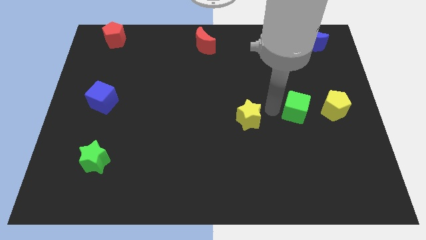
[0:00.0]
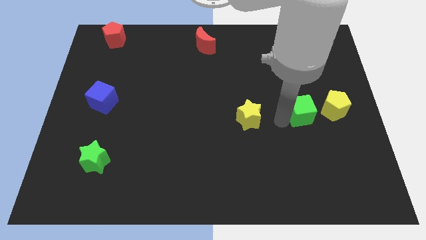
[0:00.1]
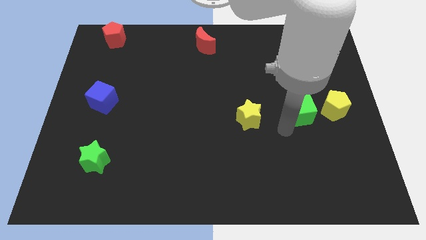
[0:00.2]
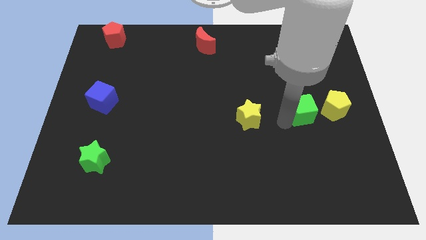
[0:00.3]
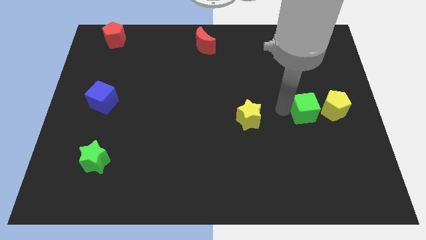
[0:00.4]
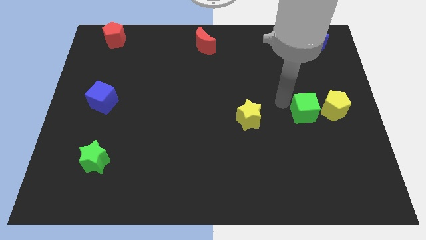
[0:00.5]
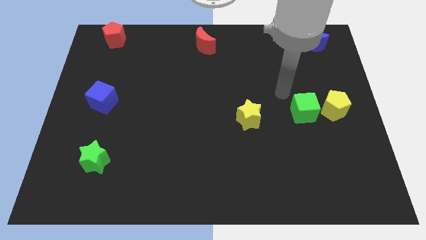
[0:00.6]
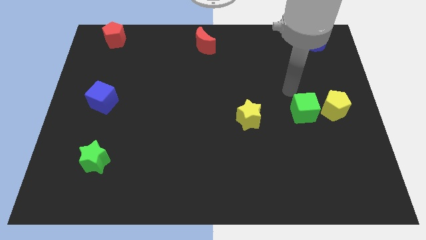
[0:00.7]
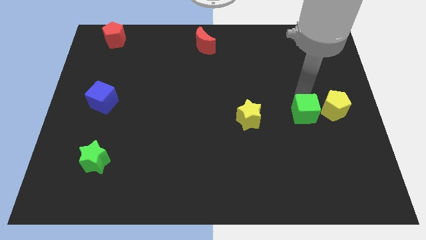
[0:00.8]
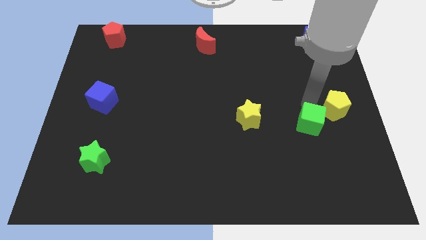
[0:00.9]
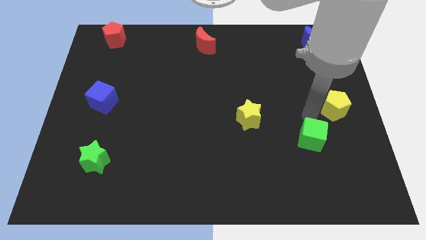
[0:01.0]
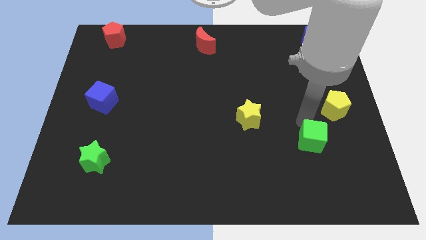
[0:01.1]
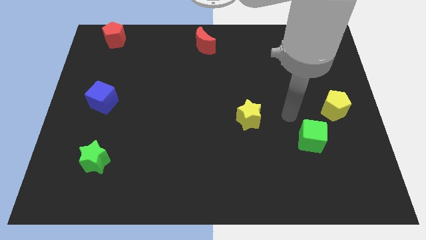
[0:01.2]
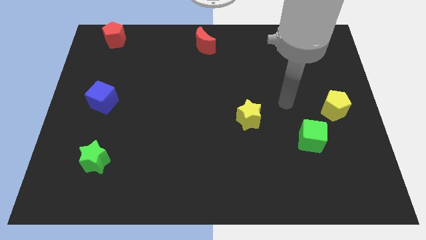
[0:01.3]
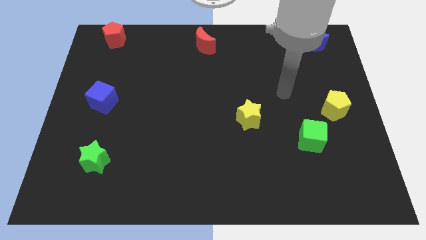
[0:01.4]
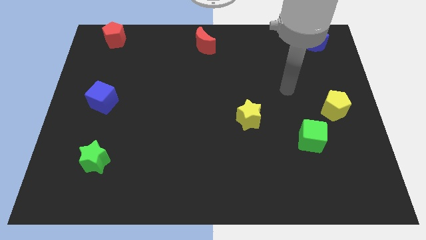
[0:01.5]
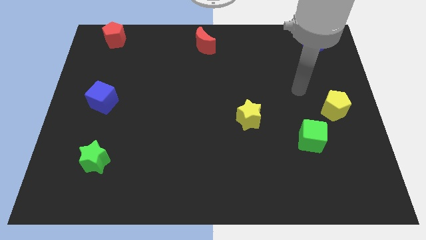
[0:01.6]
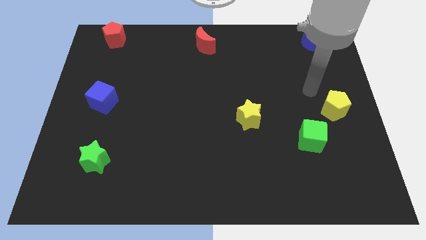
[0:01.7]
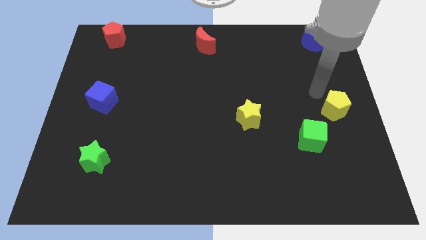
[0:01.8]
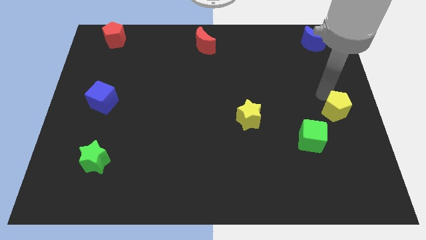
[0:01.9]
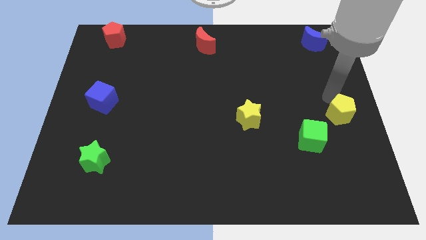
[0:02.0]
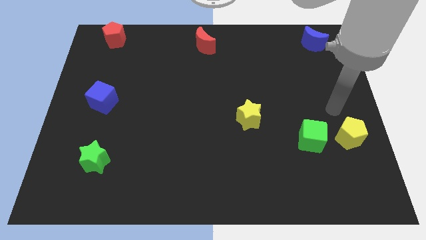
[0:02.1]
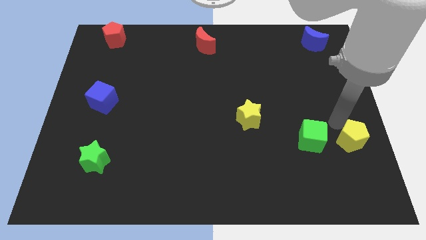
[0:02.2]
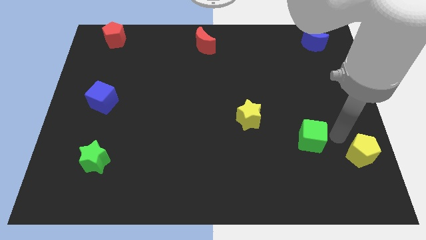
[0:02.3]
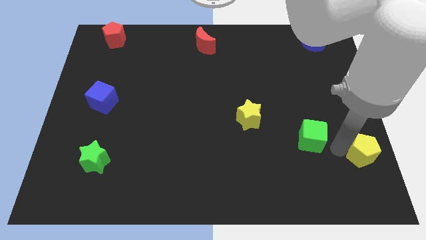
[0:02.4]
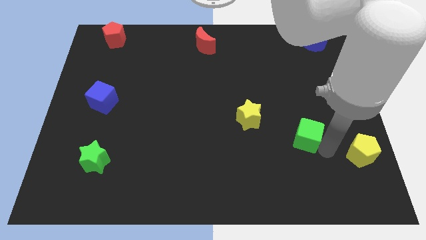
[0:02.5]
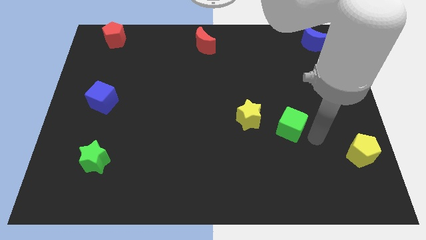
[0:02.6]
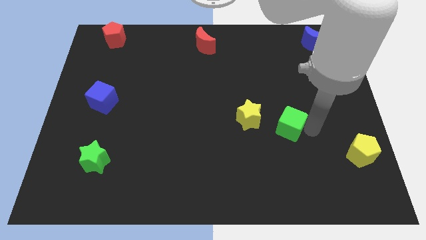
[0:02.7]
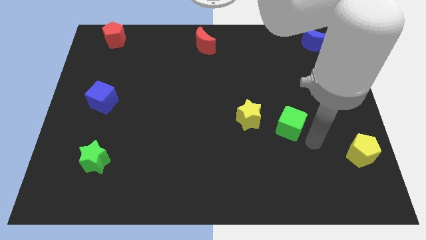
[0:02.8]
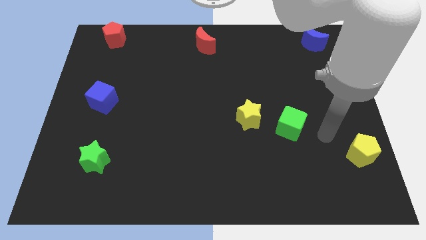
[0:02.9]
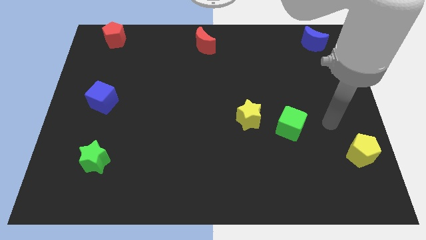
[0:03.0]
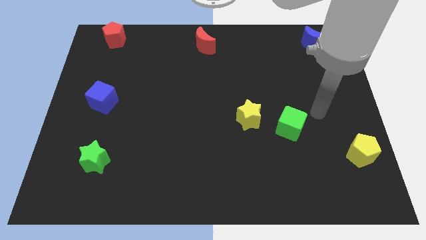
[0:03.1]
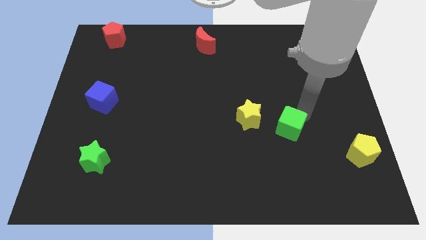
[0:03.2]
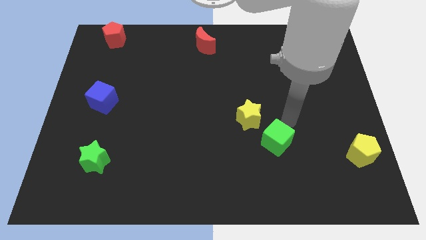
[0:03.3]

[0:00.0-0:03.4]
place green cube right to yellow star

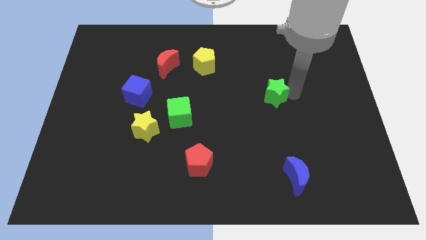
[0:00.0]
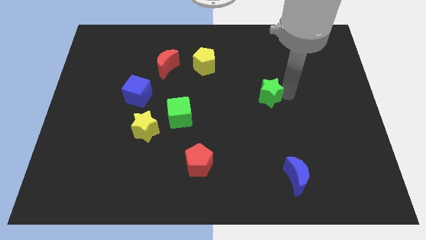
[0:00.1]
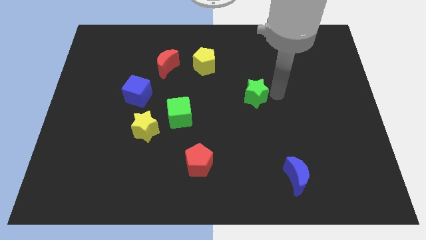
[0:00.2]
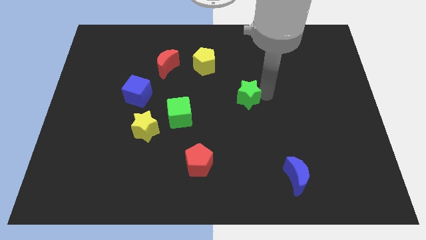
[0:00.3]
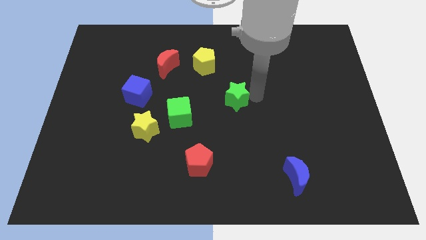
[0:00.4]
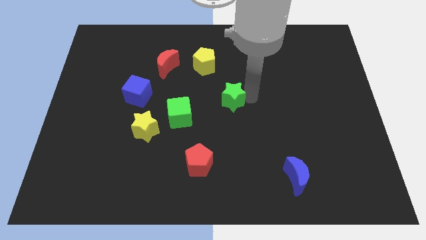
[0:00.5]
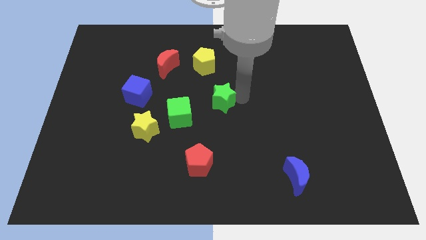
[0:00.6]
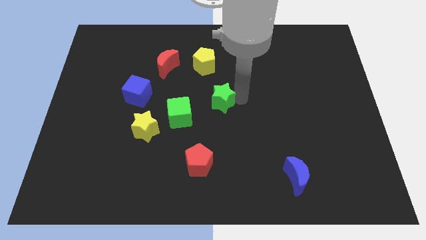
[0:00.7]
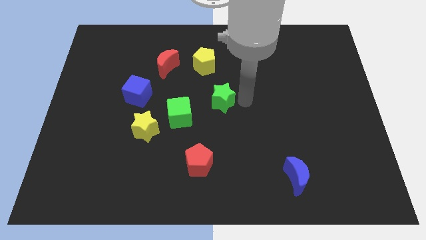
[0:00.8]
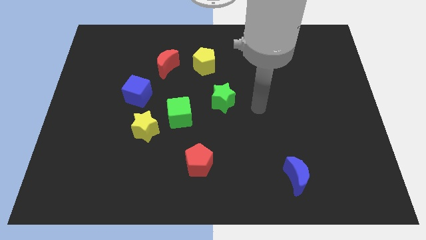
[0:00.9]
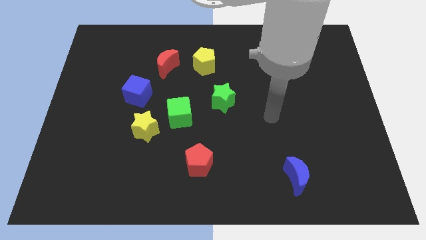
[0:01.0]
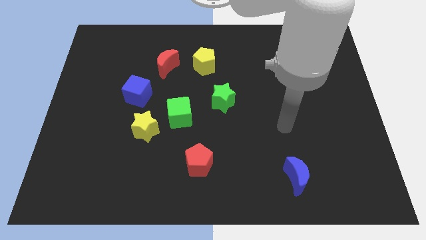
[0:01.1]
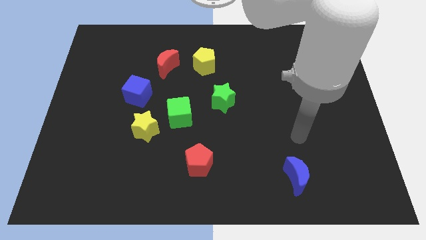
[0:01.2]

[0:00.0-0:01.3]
push green star closer to the green cube

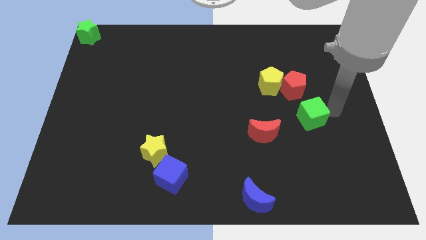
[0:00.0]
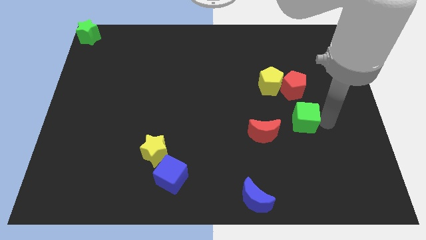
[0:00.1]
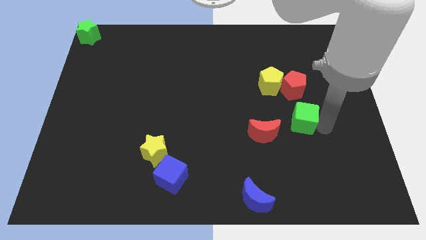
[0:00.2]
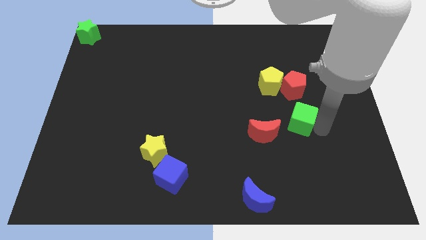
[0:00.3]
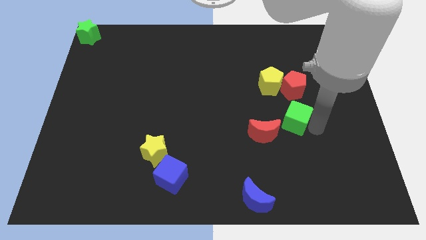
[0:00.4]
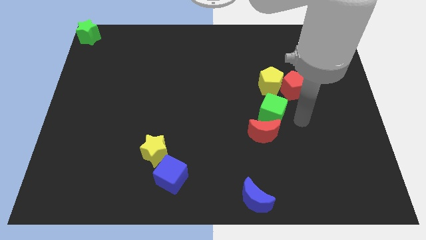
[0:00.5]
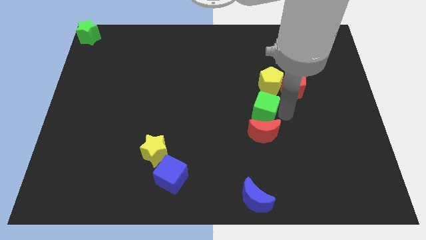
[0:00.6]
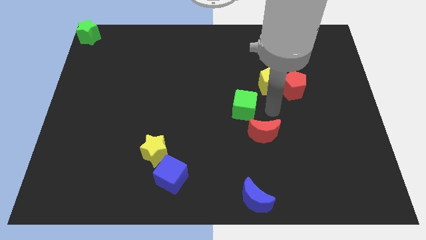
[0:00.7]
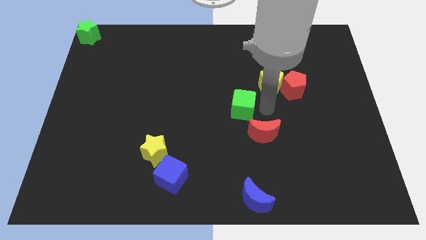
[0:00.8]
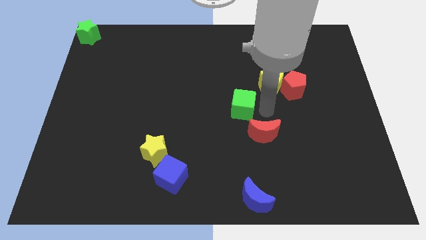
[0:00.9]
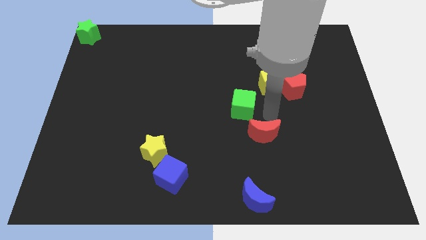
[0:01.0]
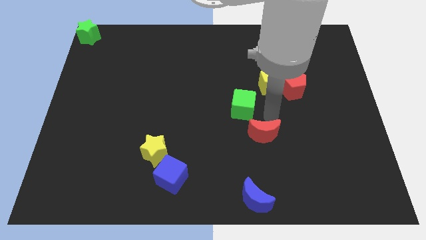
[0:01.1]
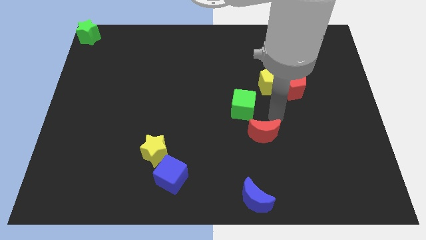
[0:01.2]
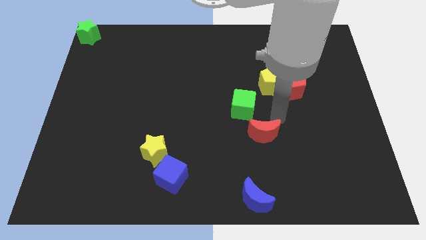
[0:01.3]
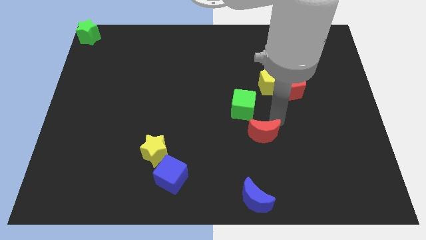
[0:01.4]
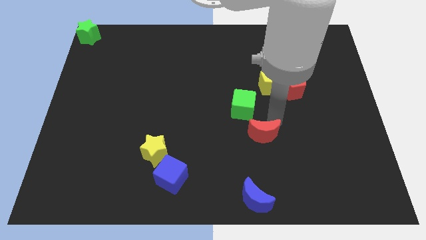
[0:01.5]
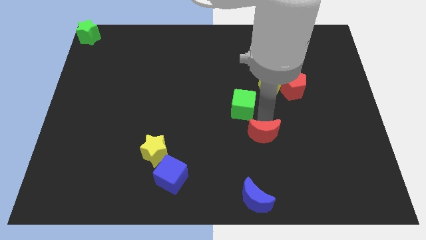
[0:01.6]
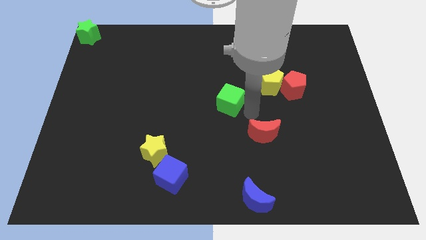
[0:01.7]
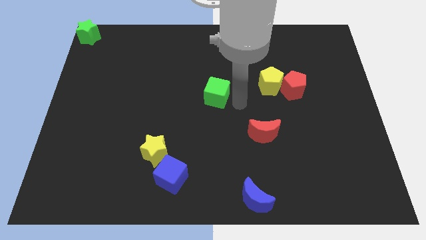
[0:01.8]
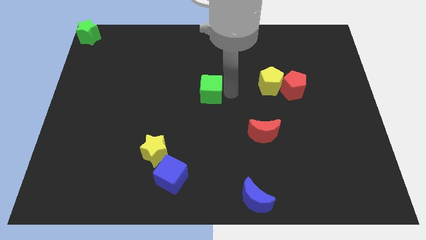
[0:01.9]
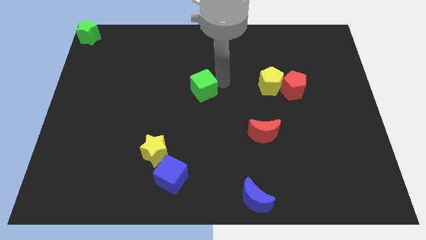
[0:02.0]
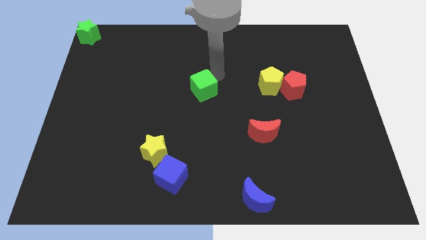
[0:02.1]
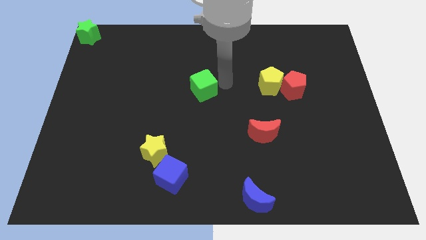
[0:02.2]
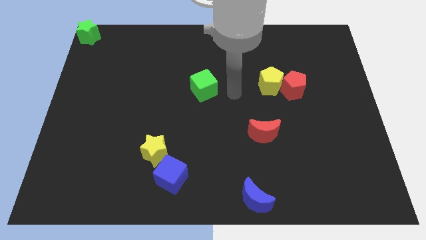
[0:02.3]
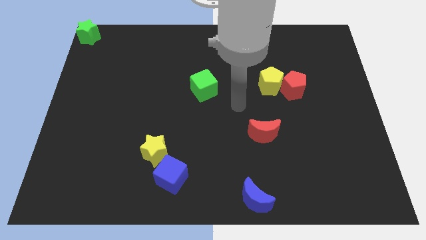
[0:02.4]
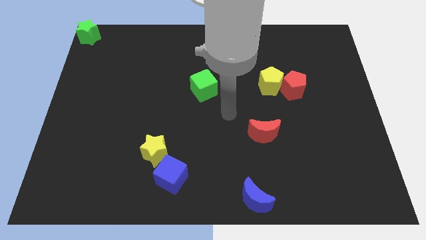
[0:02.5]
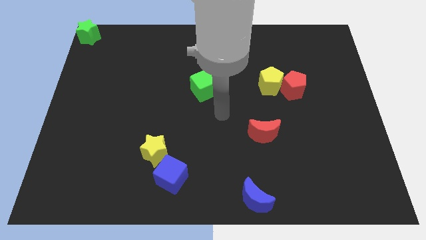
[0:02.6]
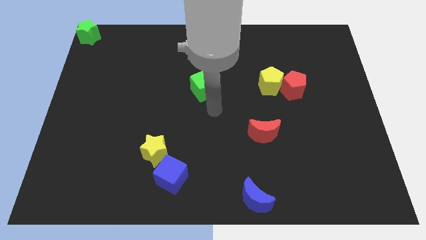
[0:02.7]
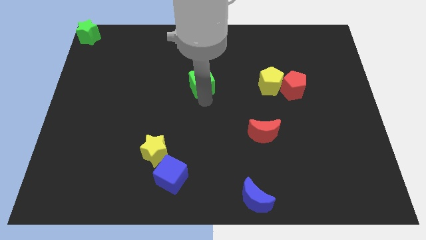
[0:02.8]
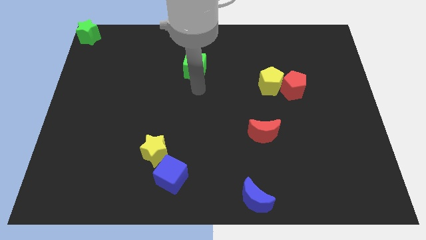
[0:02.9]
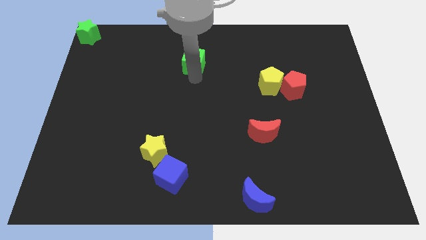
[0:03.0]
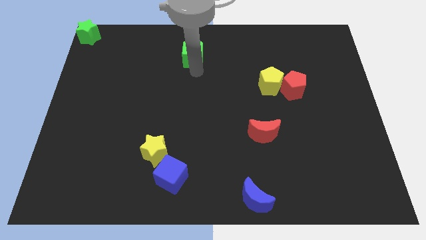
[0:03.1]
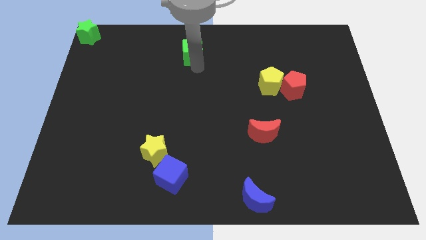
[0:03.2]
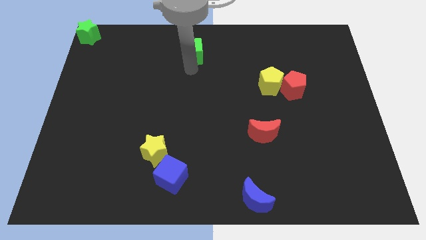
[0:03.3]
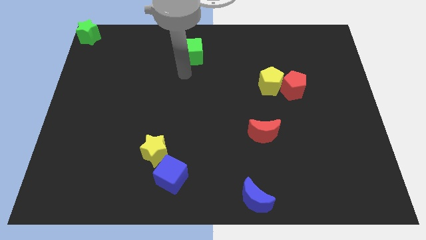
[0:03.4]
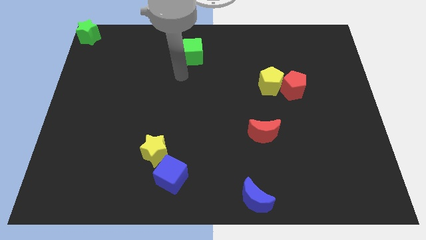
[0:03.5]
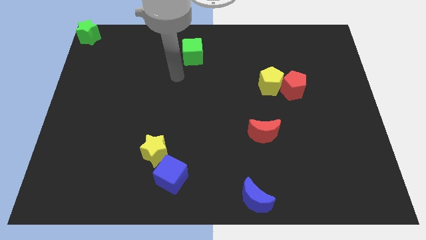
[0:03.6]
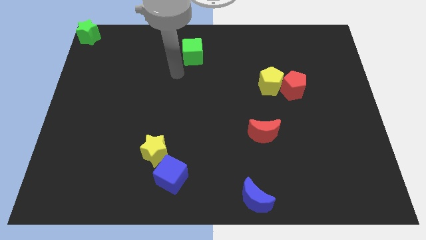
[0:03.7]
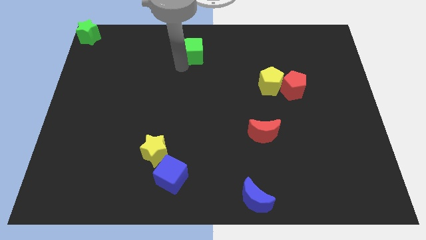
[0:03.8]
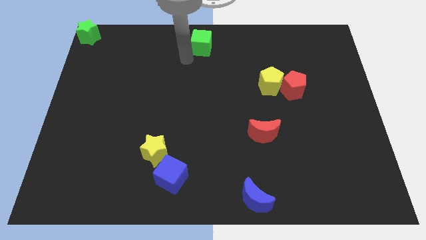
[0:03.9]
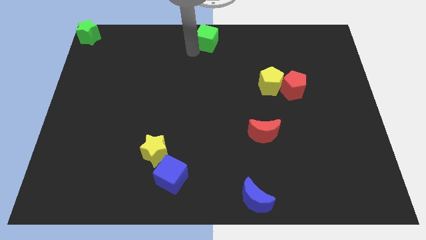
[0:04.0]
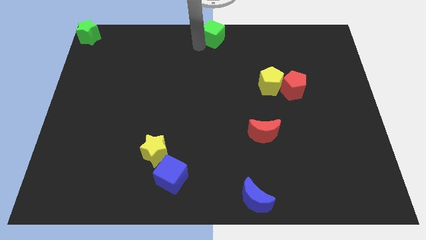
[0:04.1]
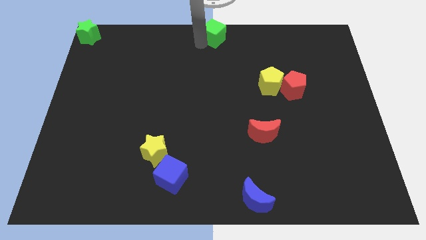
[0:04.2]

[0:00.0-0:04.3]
place the green cube on top center
